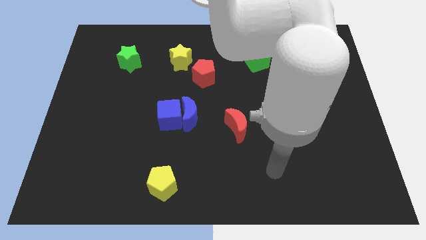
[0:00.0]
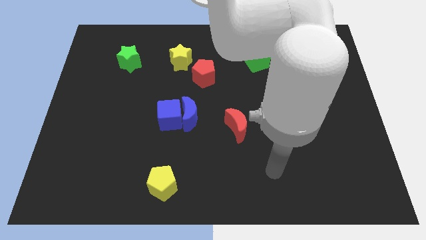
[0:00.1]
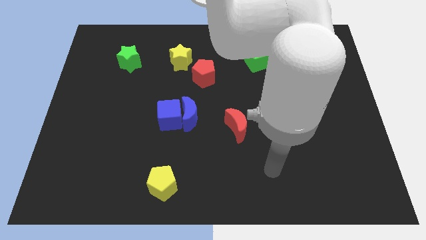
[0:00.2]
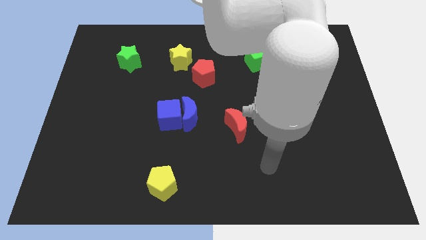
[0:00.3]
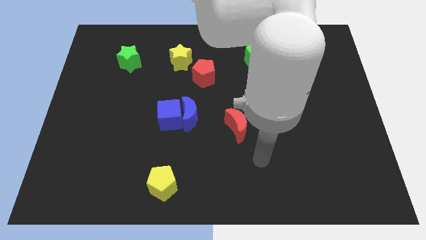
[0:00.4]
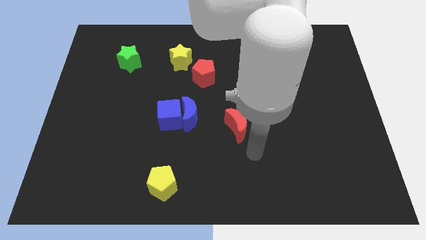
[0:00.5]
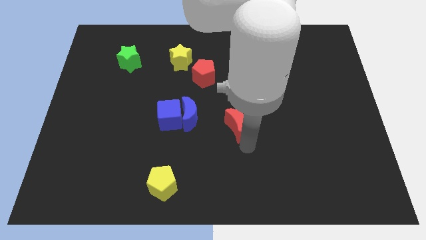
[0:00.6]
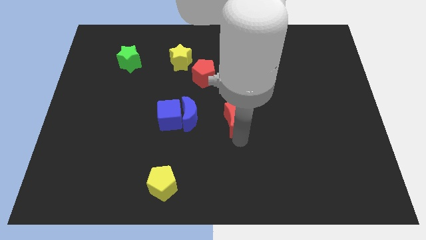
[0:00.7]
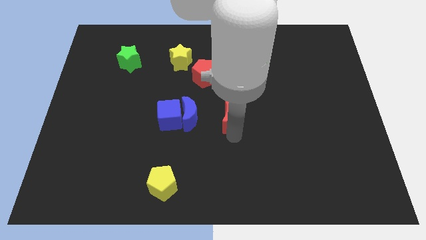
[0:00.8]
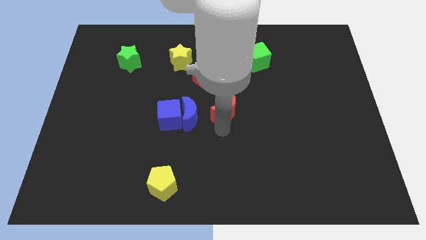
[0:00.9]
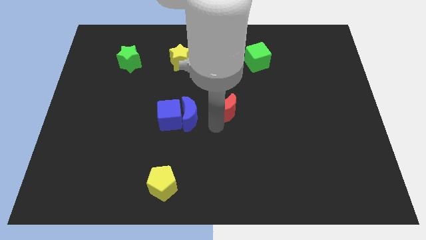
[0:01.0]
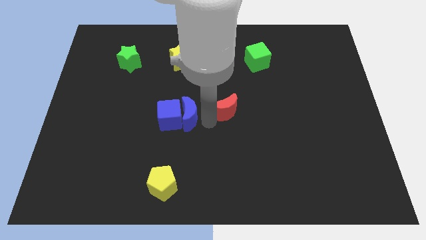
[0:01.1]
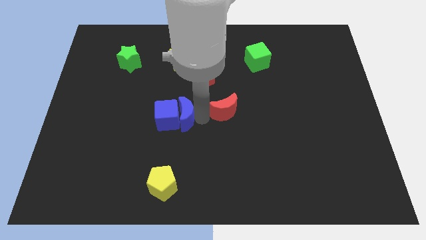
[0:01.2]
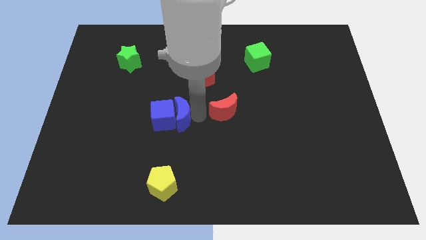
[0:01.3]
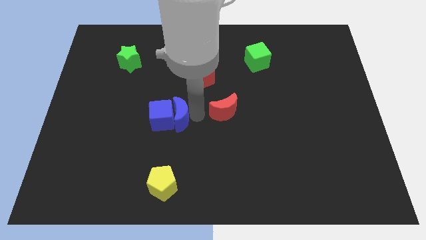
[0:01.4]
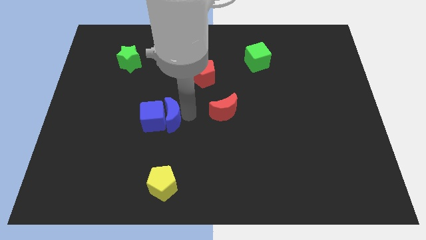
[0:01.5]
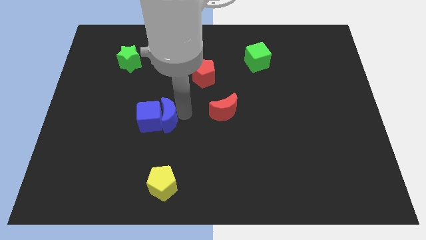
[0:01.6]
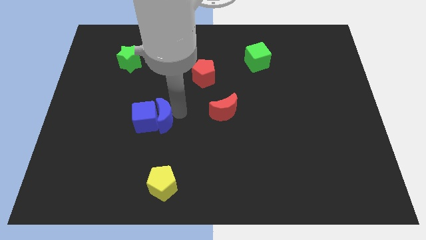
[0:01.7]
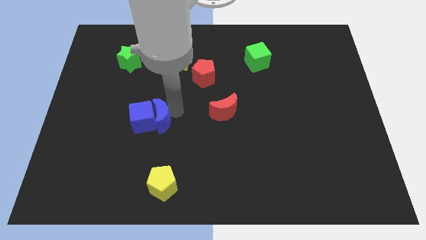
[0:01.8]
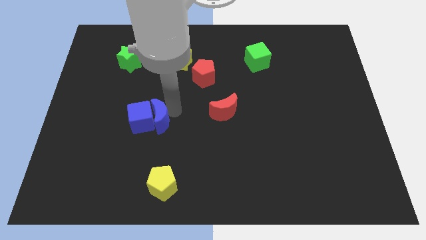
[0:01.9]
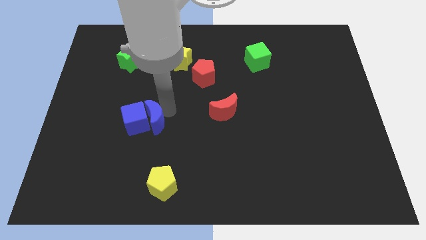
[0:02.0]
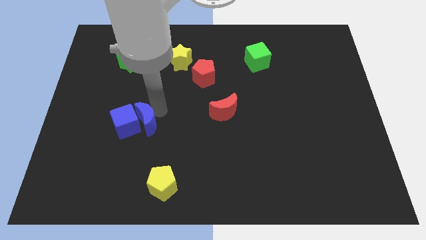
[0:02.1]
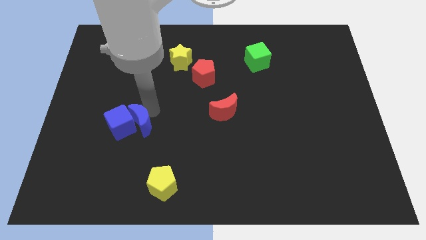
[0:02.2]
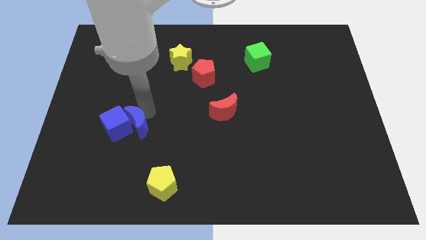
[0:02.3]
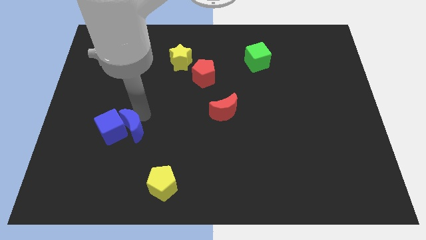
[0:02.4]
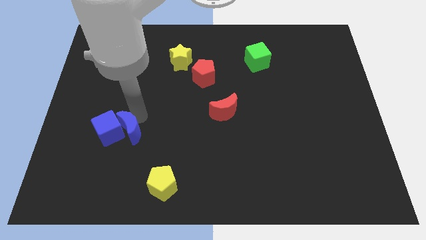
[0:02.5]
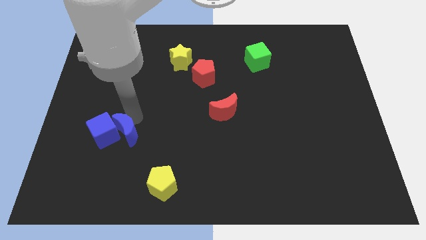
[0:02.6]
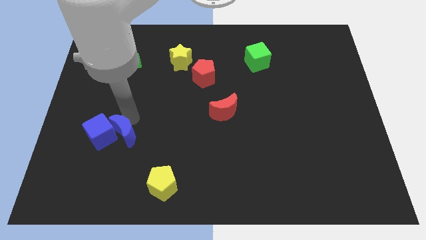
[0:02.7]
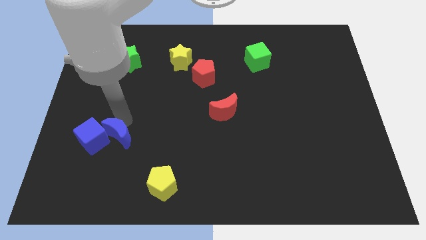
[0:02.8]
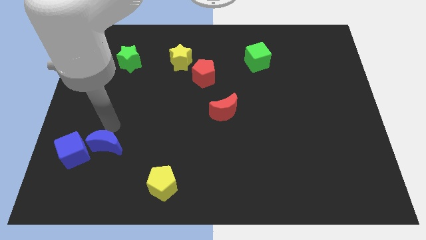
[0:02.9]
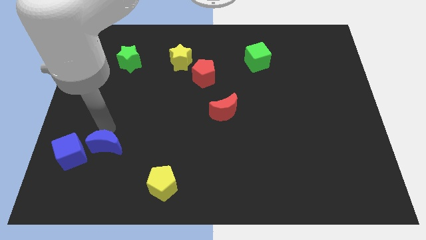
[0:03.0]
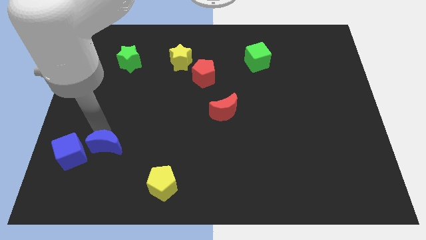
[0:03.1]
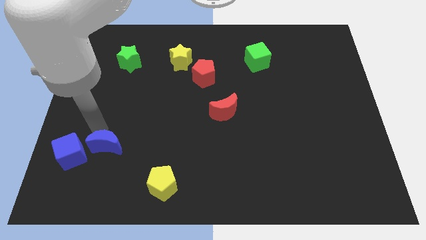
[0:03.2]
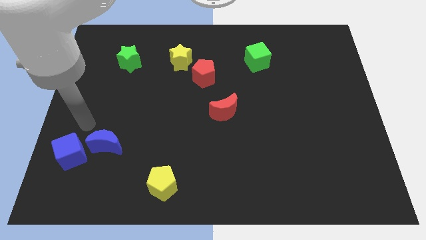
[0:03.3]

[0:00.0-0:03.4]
push the blue blocks to the left side of the table

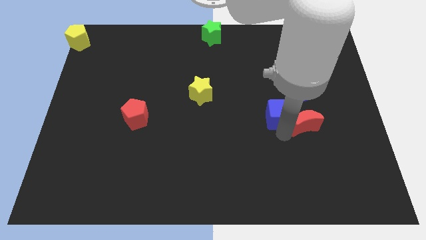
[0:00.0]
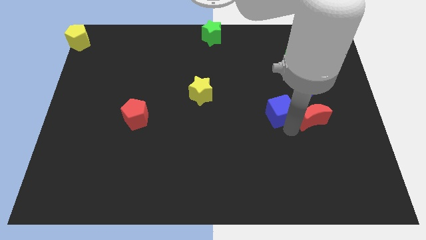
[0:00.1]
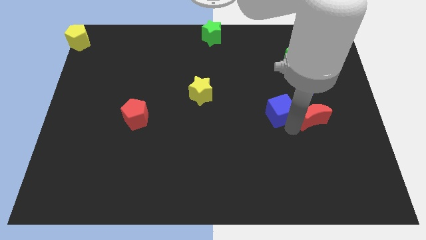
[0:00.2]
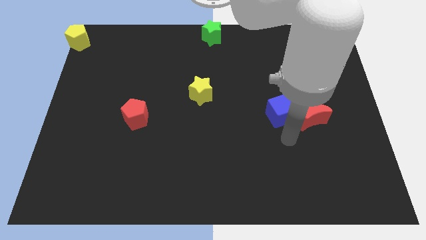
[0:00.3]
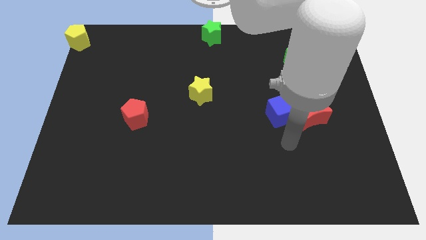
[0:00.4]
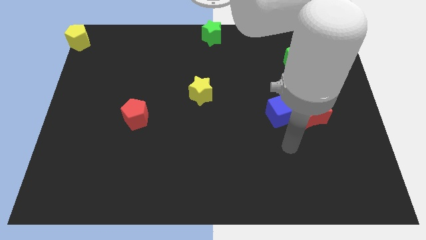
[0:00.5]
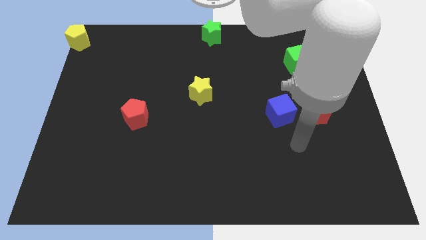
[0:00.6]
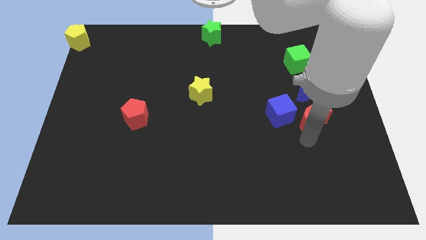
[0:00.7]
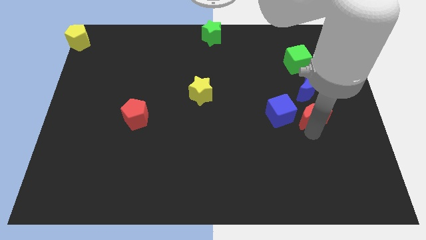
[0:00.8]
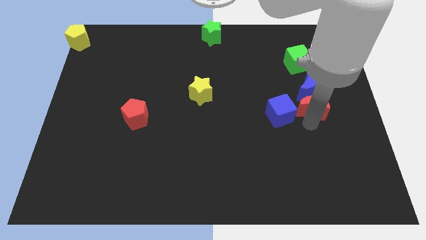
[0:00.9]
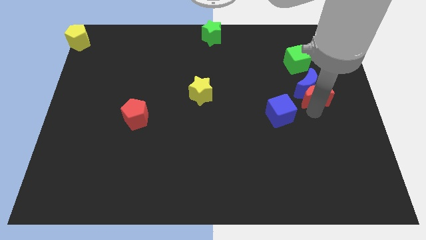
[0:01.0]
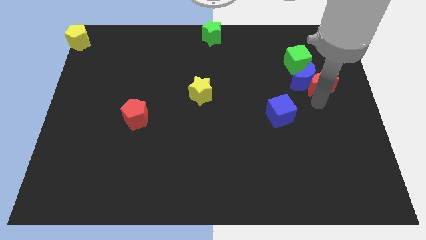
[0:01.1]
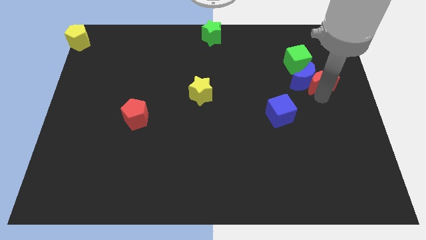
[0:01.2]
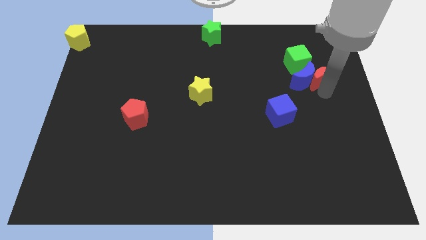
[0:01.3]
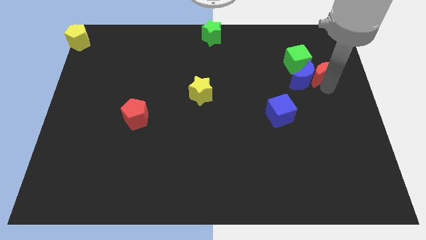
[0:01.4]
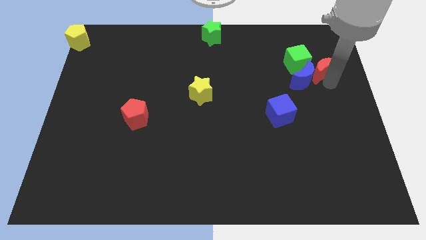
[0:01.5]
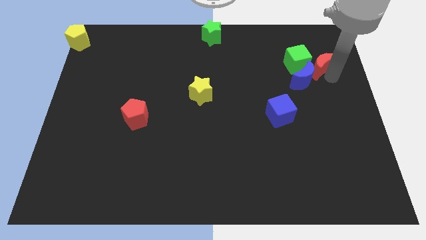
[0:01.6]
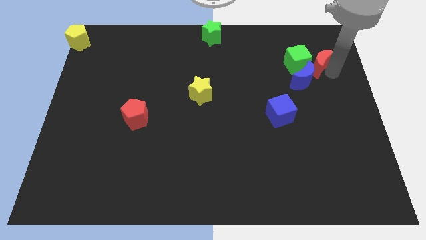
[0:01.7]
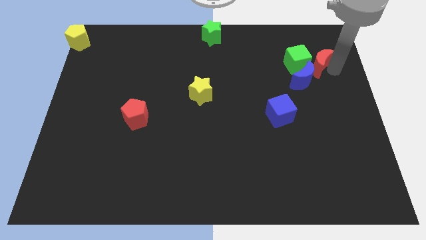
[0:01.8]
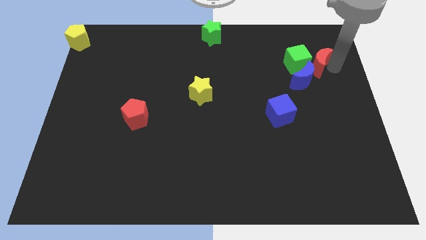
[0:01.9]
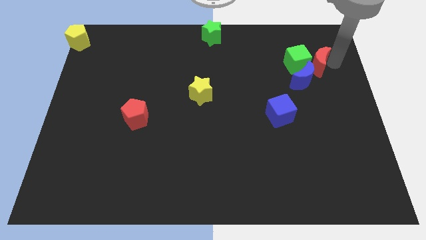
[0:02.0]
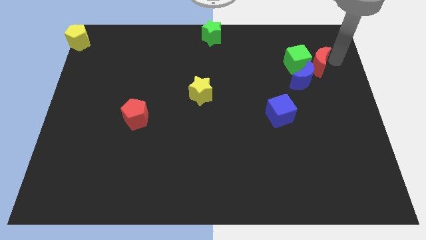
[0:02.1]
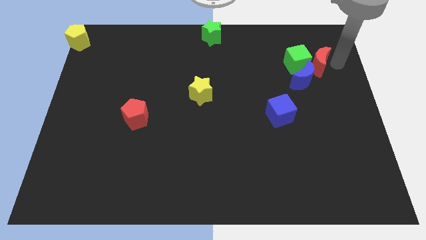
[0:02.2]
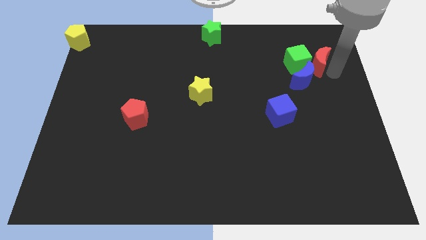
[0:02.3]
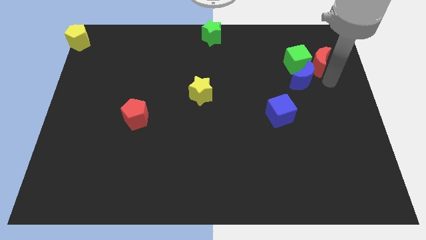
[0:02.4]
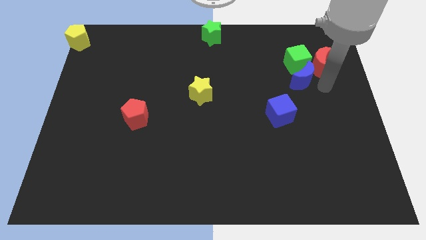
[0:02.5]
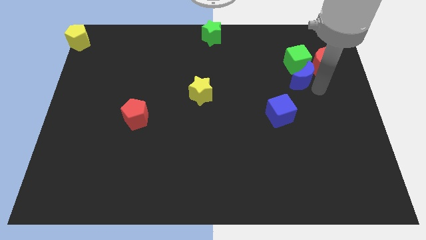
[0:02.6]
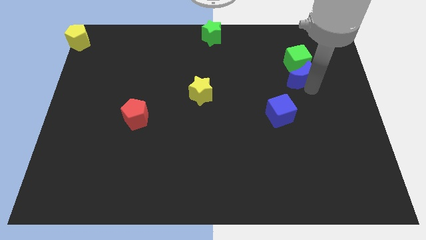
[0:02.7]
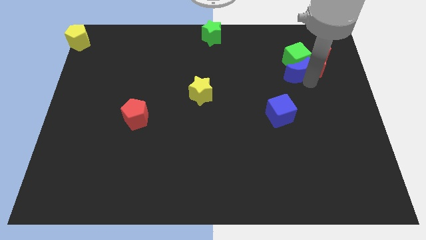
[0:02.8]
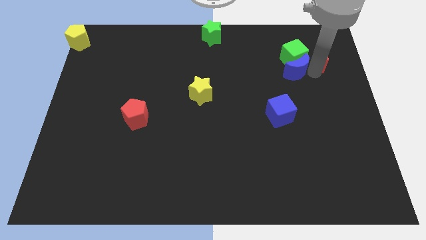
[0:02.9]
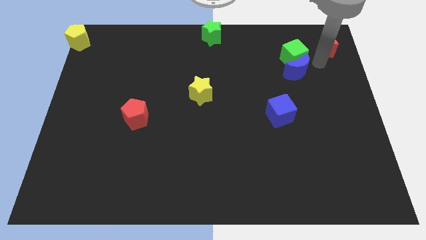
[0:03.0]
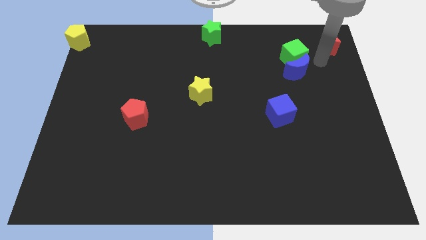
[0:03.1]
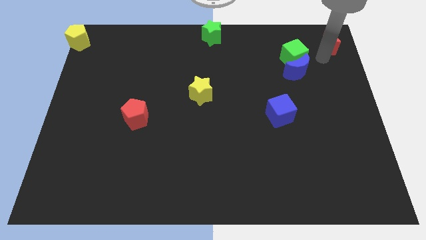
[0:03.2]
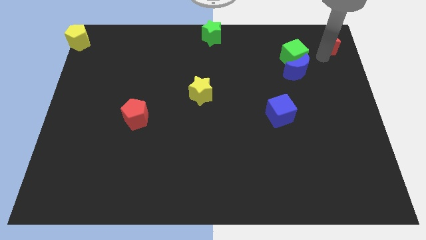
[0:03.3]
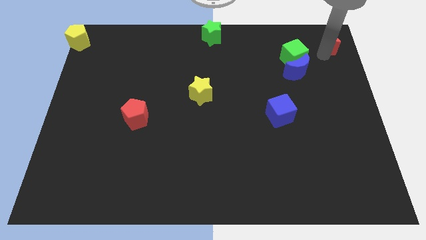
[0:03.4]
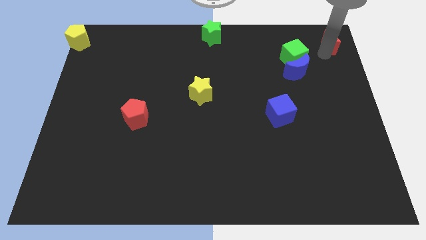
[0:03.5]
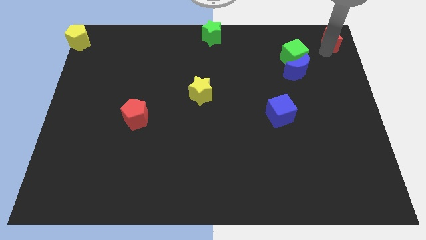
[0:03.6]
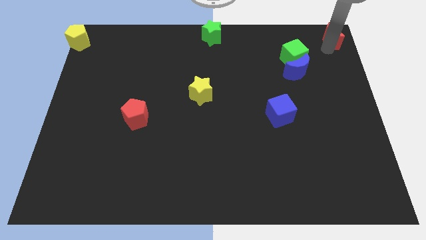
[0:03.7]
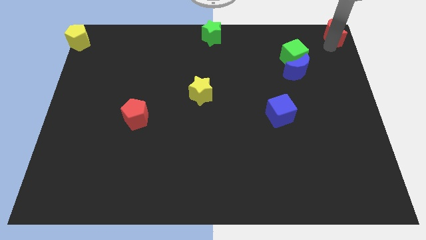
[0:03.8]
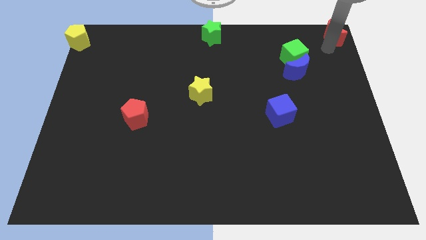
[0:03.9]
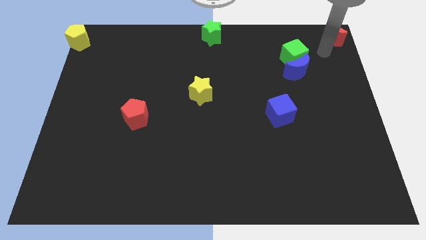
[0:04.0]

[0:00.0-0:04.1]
move the red crescent to the top right corner of the board

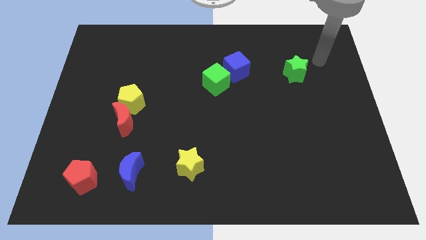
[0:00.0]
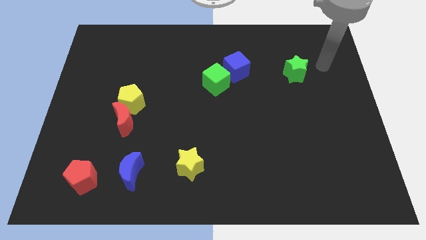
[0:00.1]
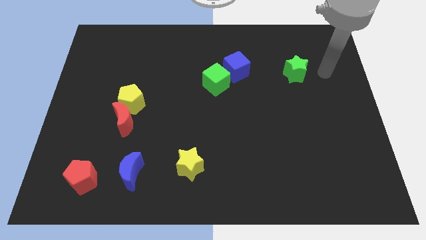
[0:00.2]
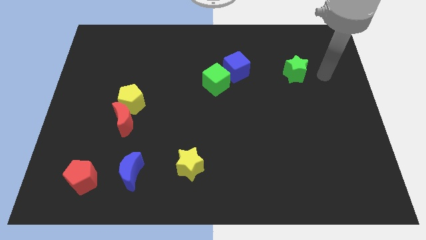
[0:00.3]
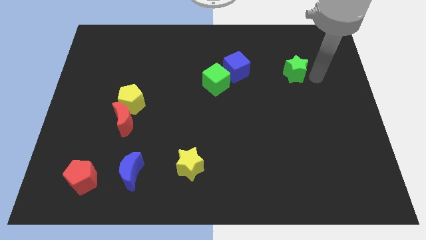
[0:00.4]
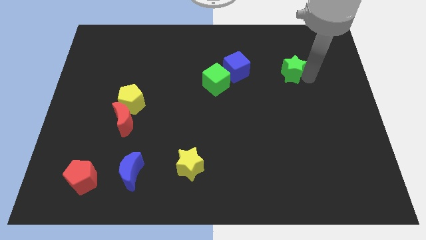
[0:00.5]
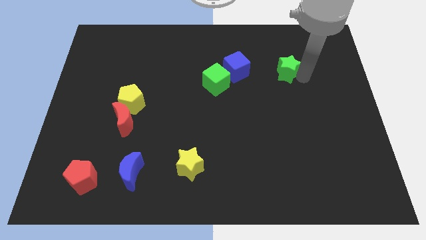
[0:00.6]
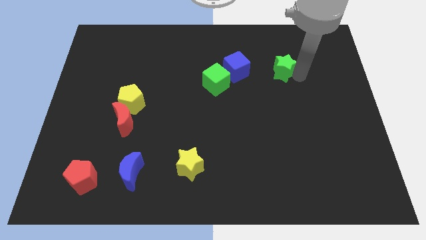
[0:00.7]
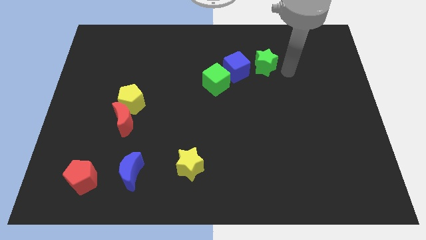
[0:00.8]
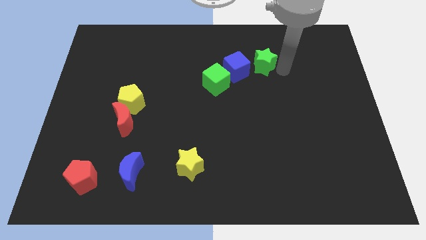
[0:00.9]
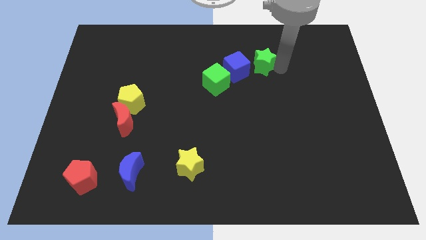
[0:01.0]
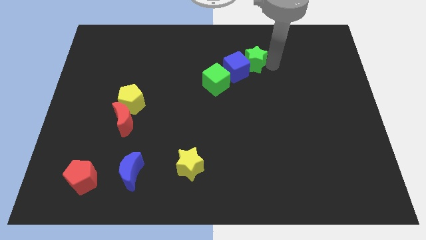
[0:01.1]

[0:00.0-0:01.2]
push the green star into the blue cube

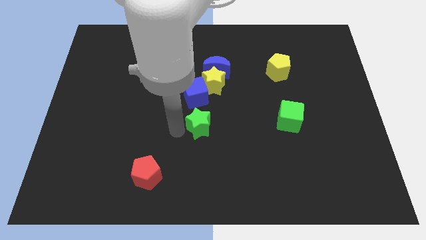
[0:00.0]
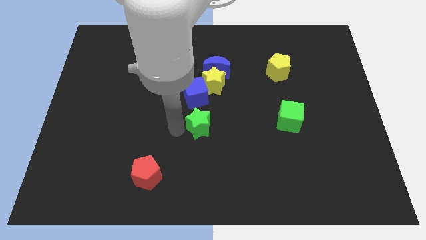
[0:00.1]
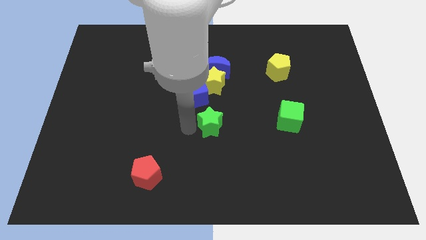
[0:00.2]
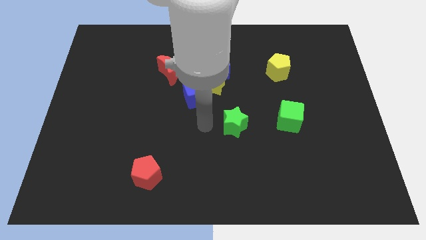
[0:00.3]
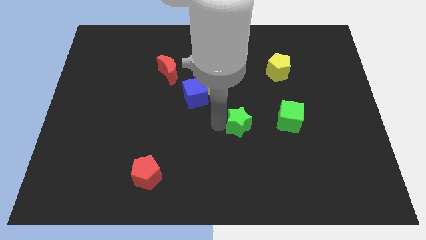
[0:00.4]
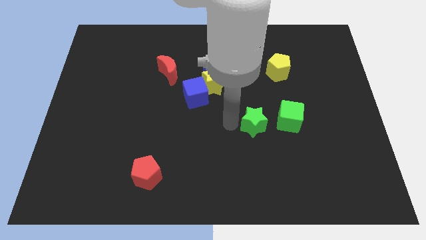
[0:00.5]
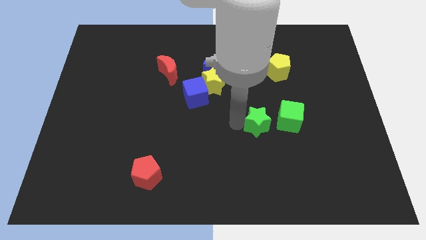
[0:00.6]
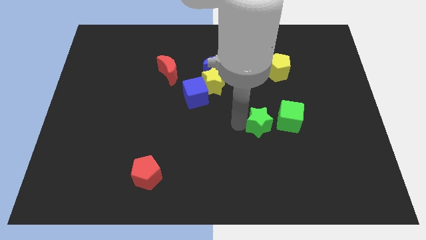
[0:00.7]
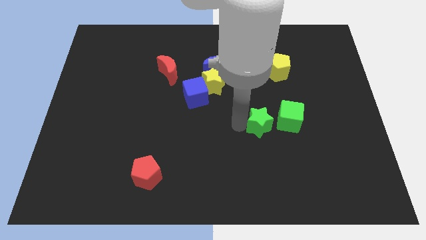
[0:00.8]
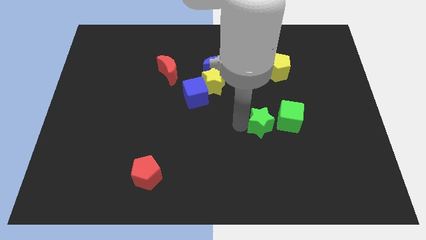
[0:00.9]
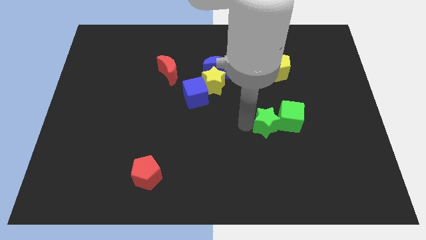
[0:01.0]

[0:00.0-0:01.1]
push the green star into the green cube
